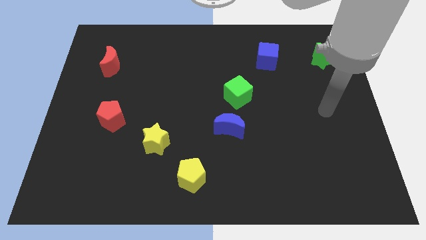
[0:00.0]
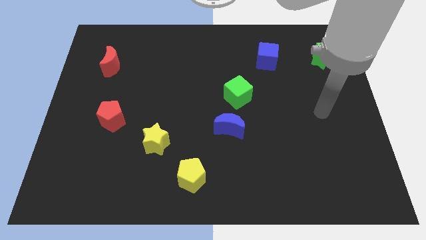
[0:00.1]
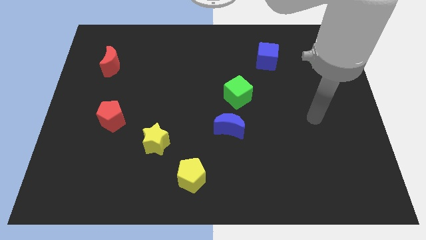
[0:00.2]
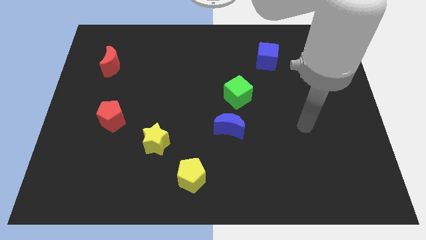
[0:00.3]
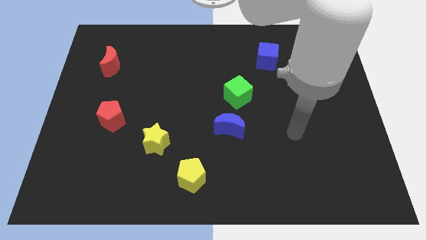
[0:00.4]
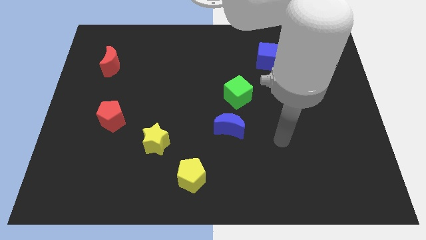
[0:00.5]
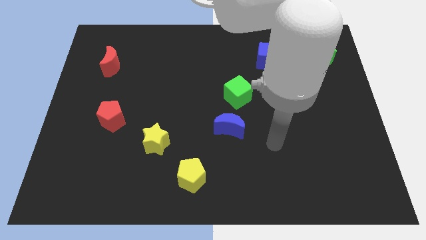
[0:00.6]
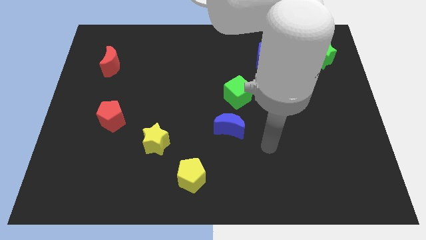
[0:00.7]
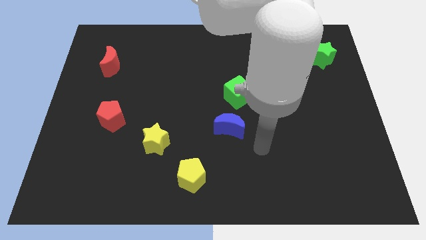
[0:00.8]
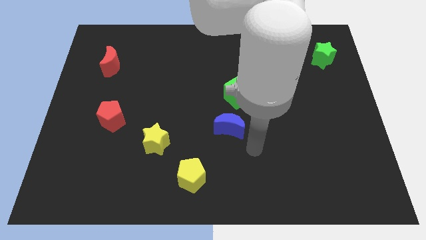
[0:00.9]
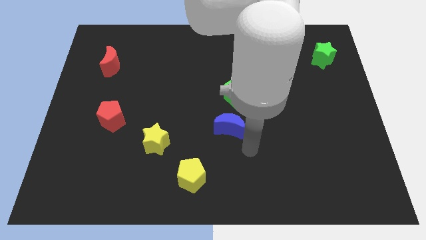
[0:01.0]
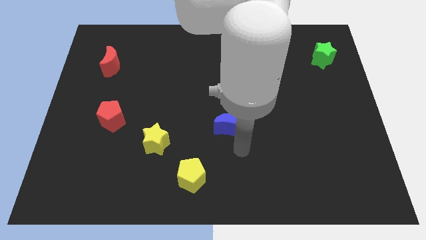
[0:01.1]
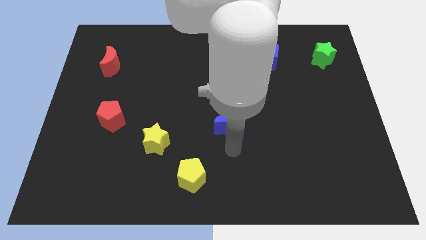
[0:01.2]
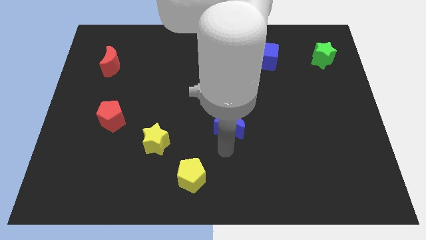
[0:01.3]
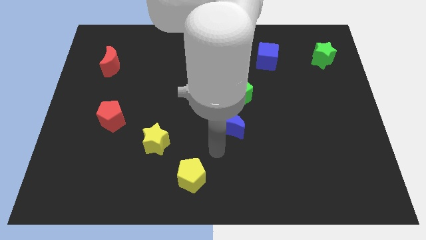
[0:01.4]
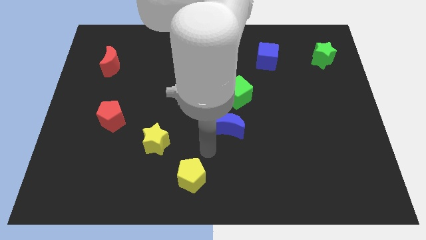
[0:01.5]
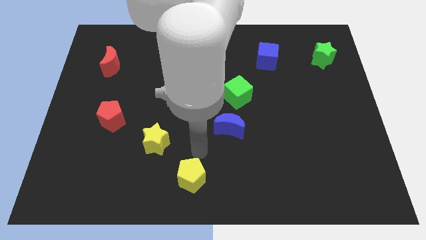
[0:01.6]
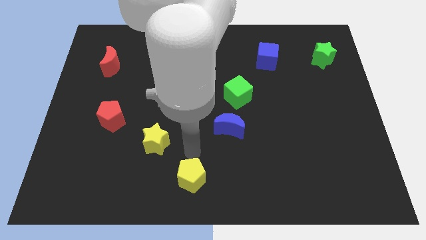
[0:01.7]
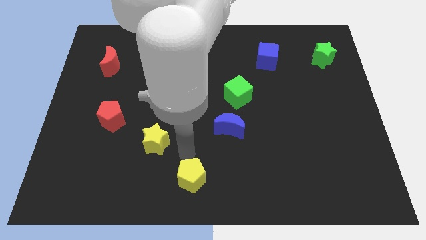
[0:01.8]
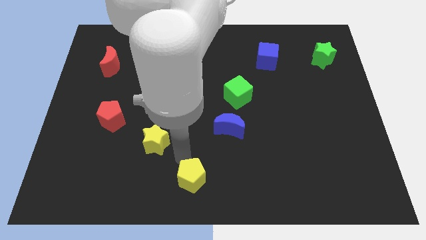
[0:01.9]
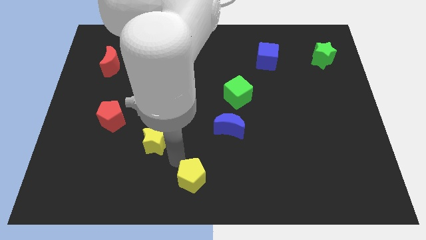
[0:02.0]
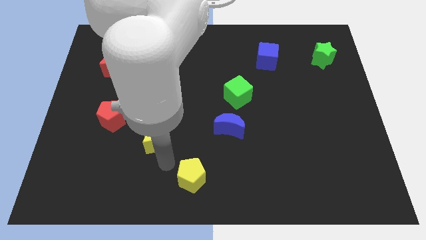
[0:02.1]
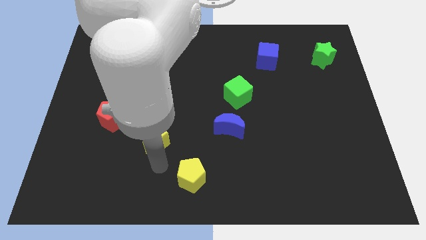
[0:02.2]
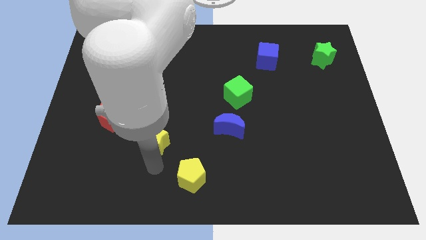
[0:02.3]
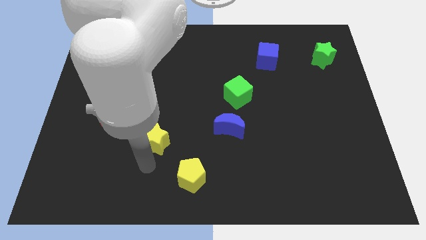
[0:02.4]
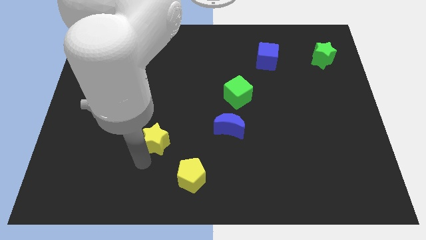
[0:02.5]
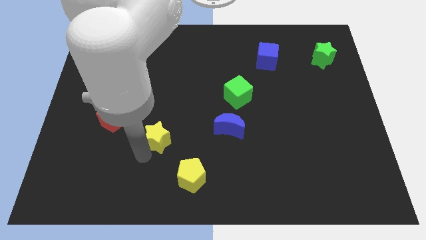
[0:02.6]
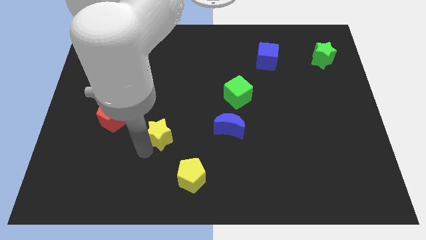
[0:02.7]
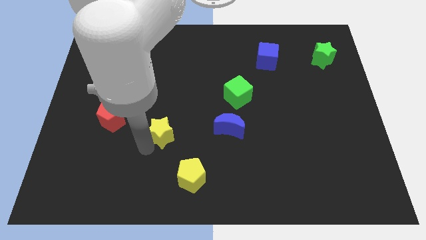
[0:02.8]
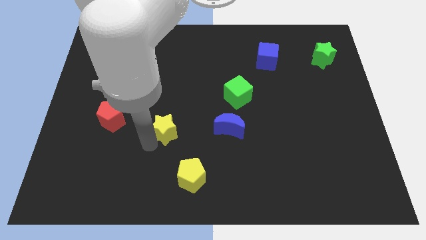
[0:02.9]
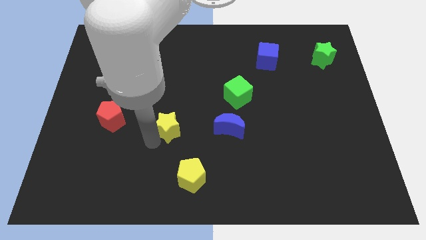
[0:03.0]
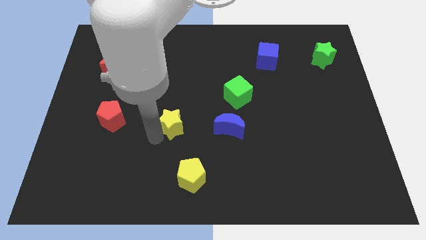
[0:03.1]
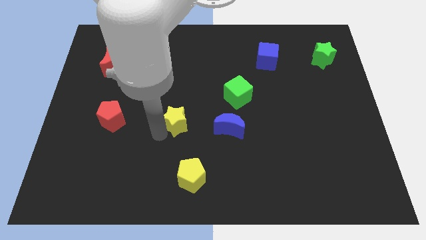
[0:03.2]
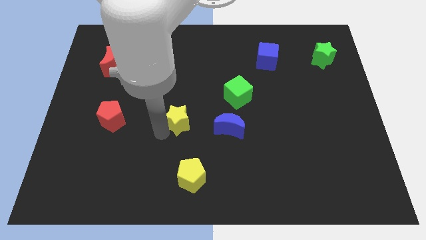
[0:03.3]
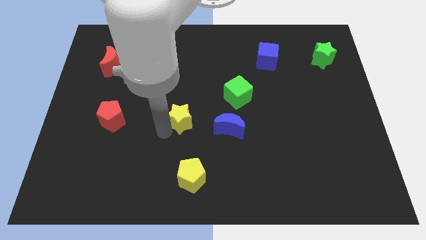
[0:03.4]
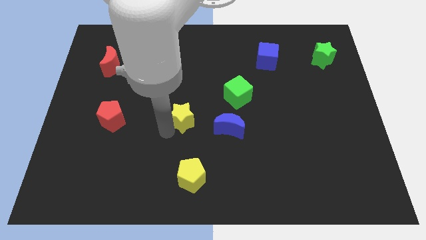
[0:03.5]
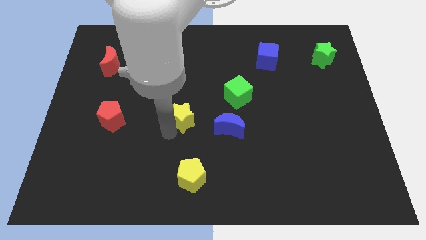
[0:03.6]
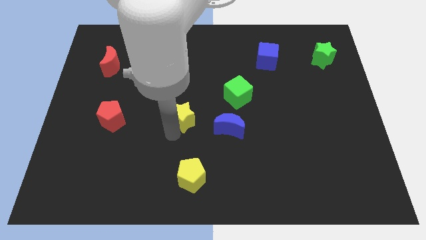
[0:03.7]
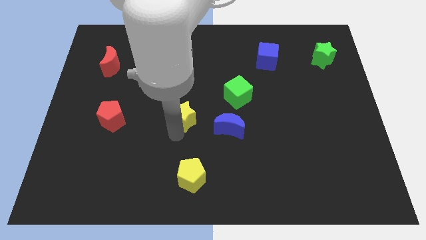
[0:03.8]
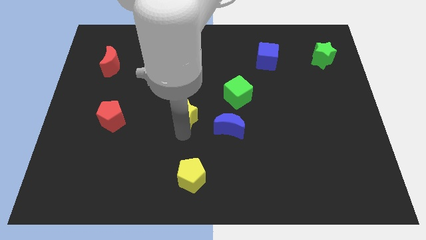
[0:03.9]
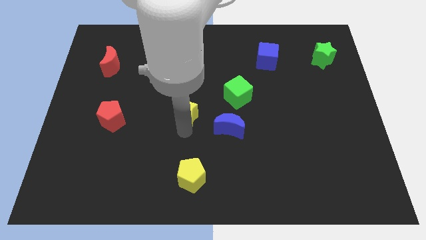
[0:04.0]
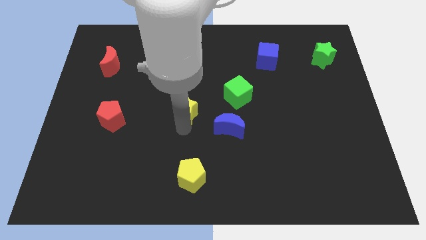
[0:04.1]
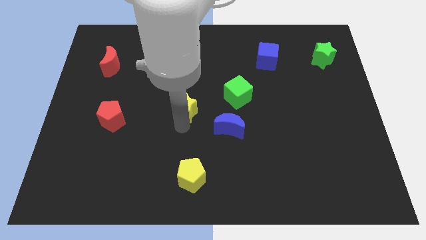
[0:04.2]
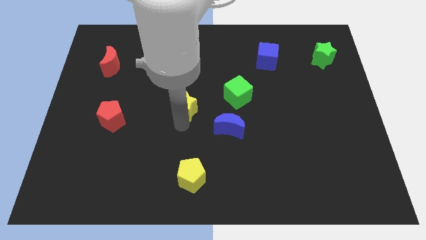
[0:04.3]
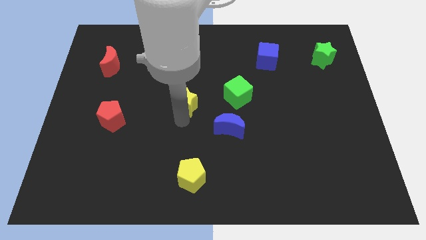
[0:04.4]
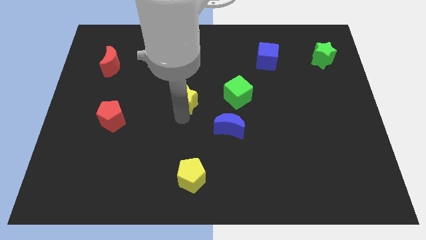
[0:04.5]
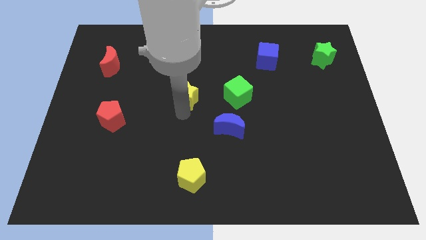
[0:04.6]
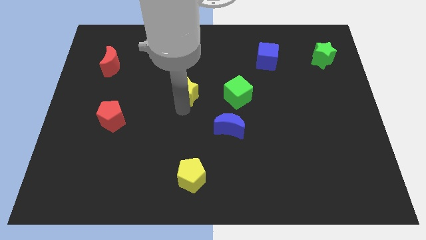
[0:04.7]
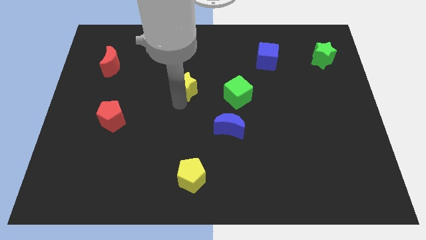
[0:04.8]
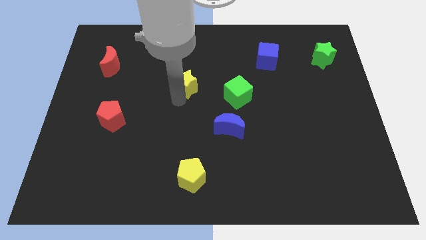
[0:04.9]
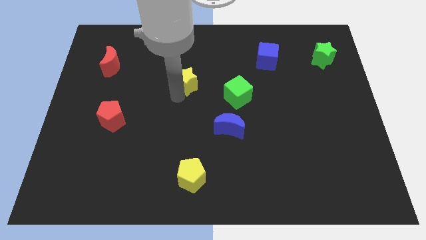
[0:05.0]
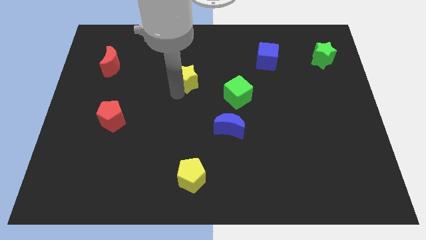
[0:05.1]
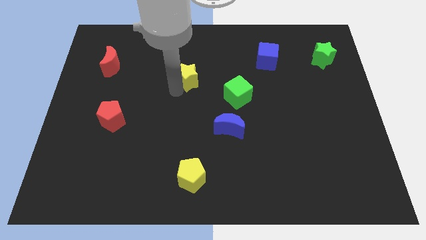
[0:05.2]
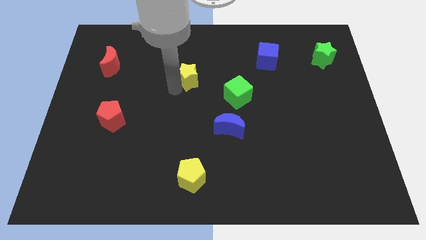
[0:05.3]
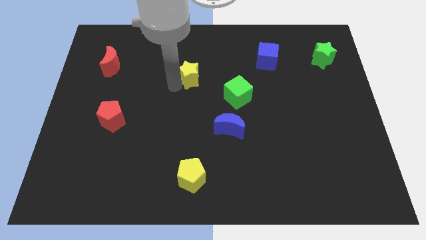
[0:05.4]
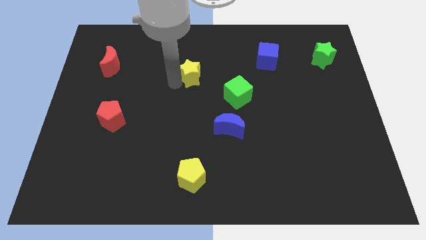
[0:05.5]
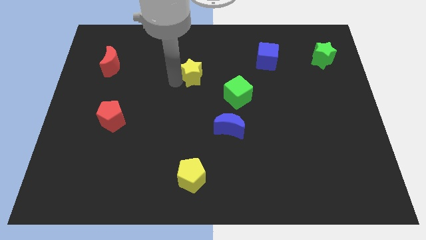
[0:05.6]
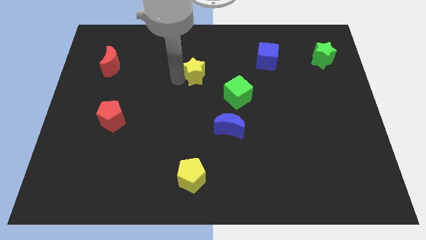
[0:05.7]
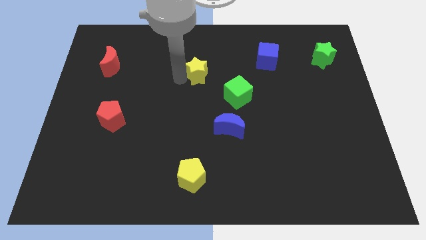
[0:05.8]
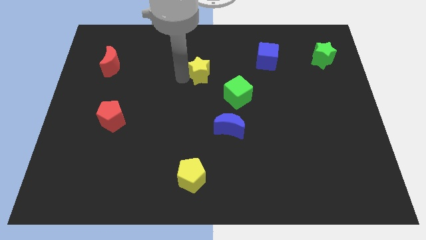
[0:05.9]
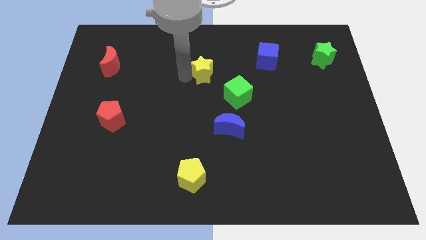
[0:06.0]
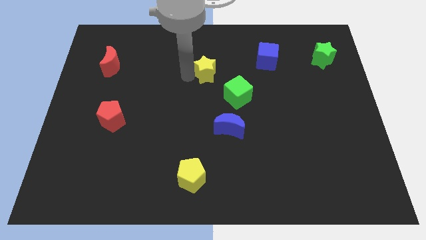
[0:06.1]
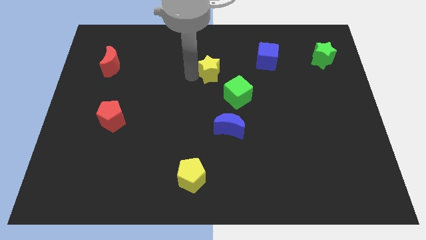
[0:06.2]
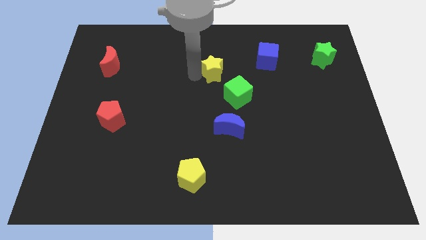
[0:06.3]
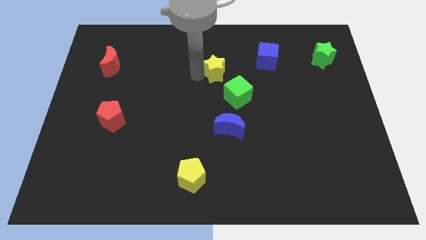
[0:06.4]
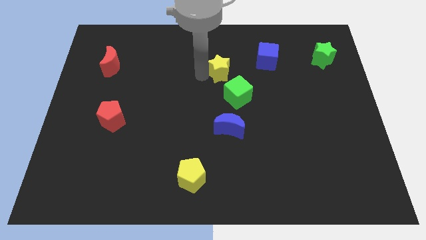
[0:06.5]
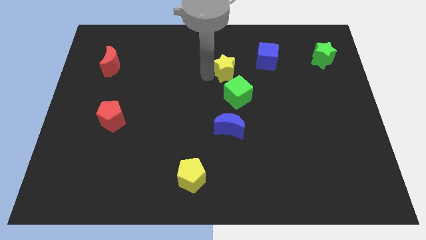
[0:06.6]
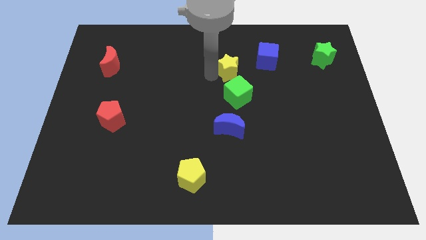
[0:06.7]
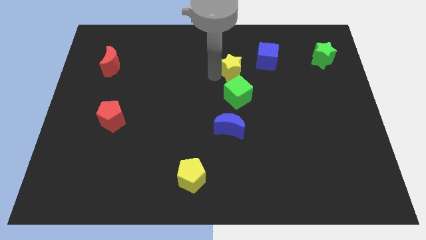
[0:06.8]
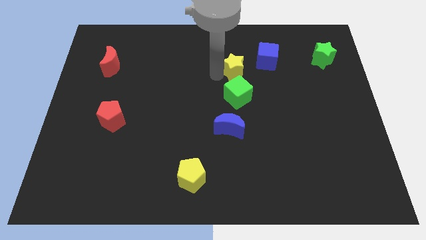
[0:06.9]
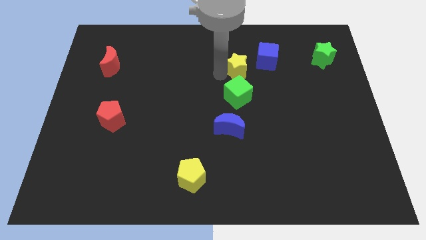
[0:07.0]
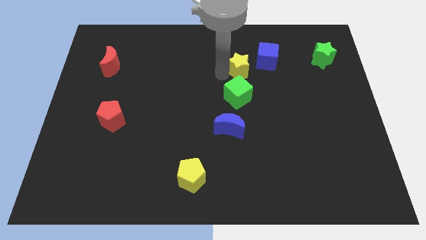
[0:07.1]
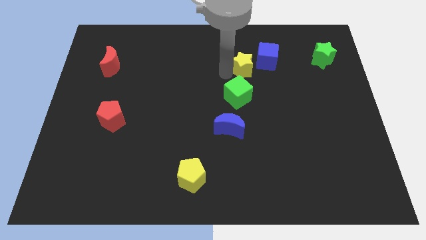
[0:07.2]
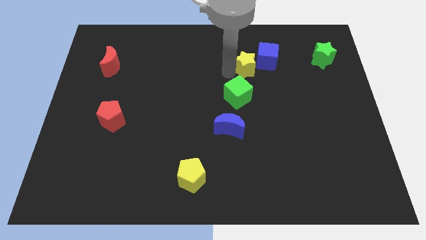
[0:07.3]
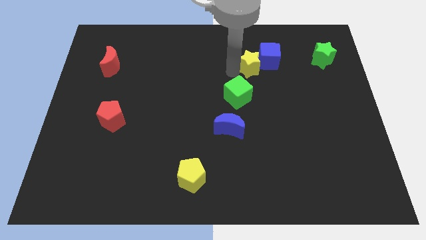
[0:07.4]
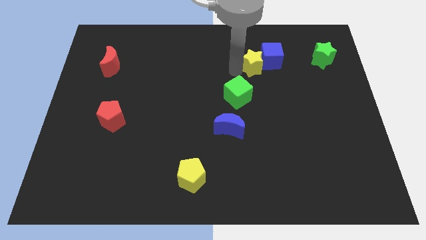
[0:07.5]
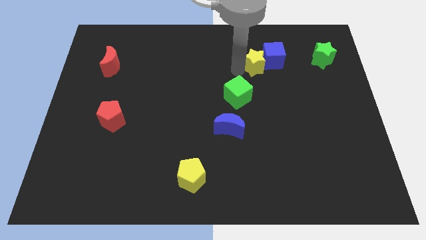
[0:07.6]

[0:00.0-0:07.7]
slide the yellow star close to the blue cube

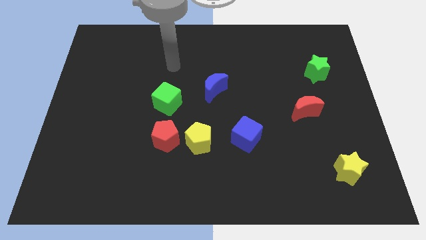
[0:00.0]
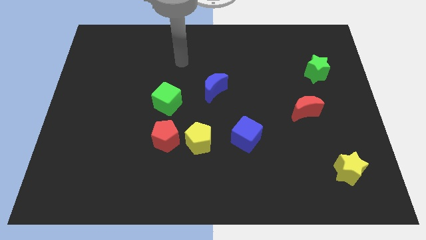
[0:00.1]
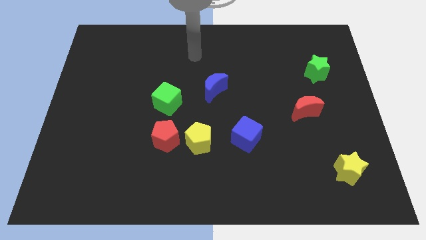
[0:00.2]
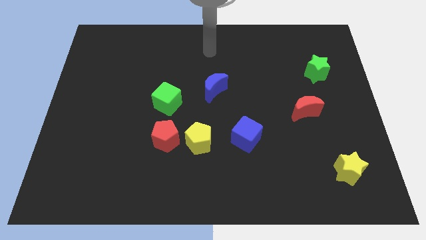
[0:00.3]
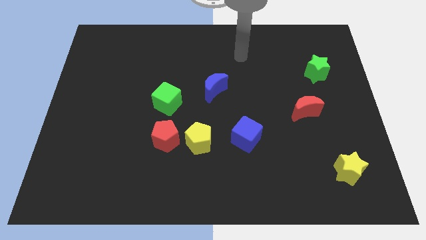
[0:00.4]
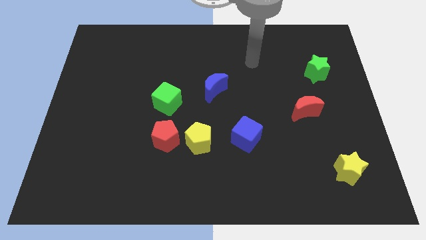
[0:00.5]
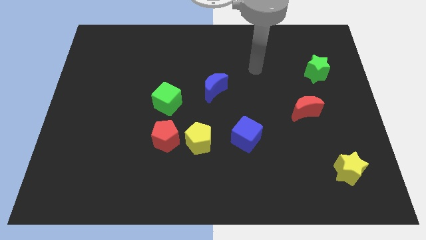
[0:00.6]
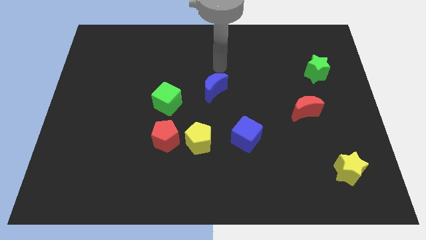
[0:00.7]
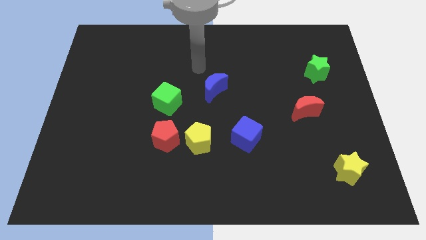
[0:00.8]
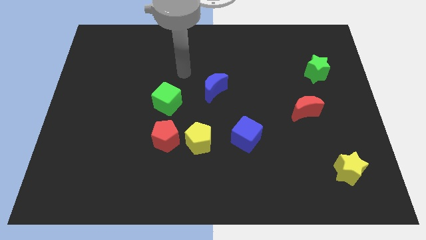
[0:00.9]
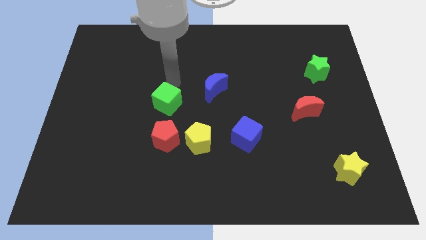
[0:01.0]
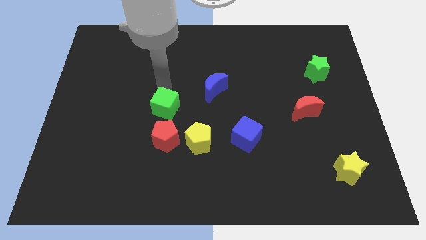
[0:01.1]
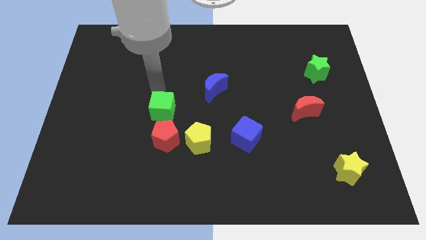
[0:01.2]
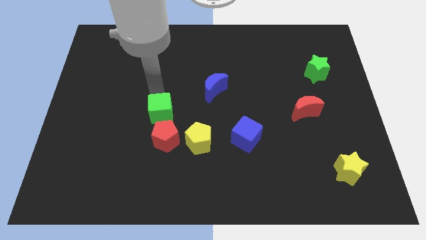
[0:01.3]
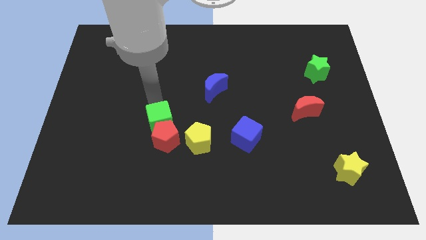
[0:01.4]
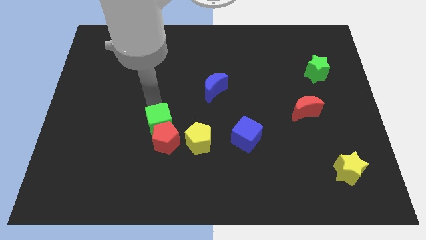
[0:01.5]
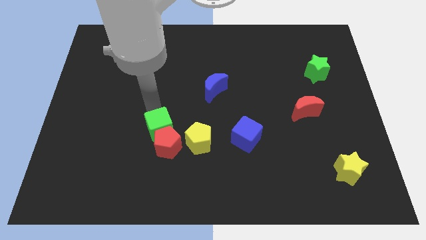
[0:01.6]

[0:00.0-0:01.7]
slide the green cube next to the red pentagon
